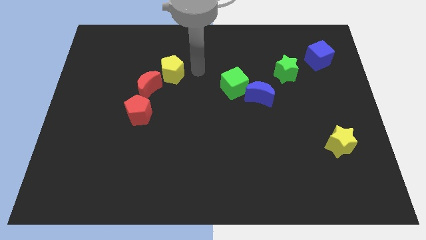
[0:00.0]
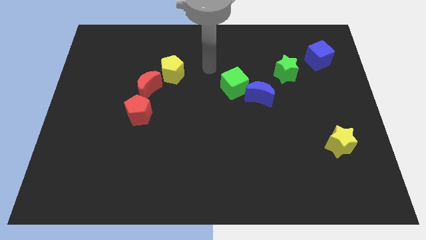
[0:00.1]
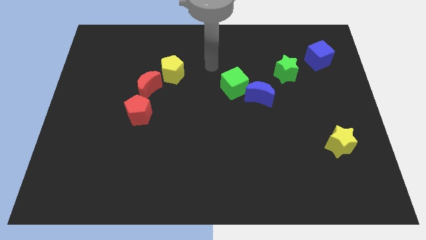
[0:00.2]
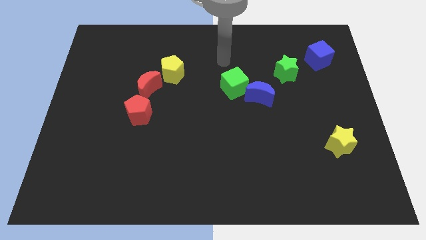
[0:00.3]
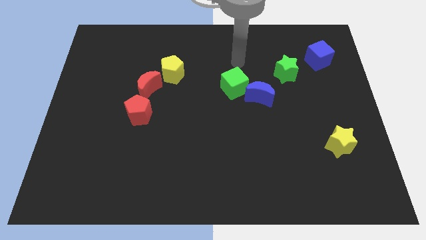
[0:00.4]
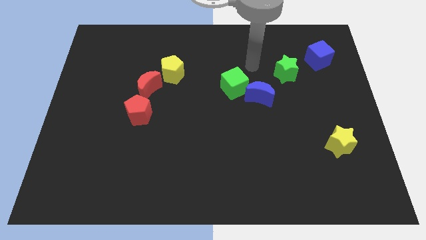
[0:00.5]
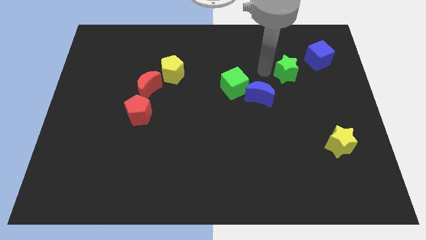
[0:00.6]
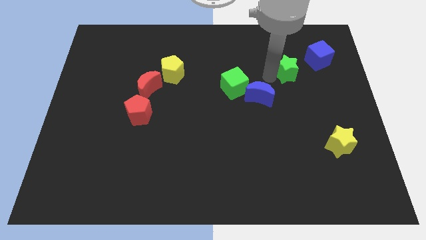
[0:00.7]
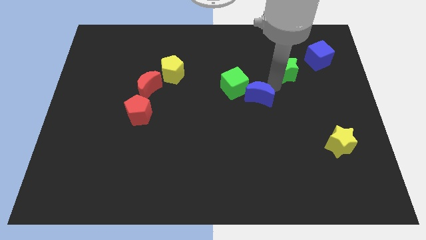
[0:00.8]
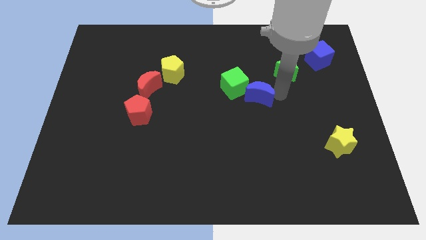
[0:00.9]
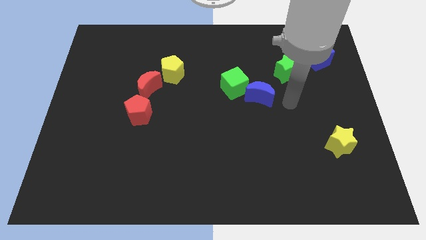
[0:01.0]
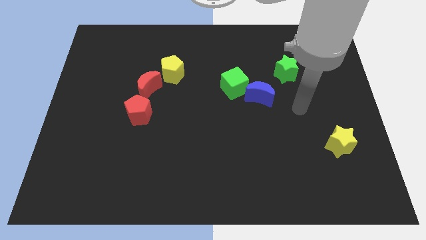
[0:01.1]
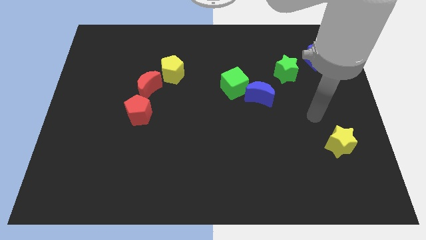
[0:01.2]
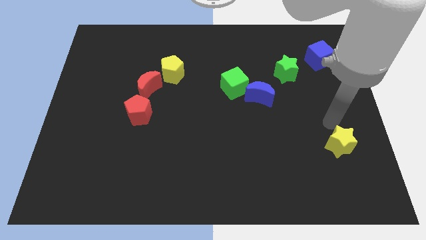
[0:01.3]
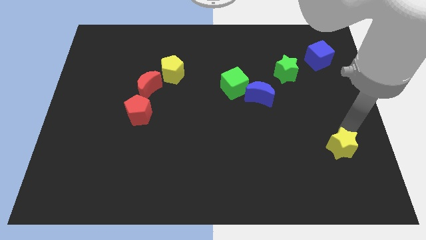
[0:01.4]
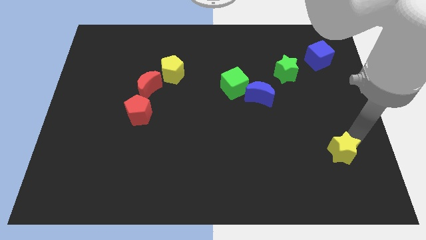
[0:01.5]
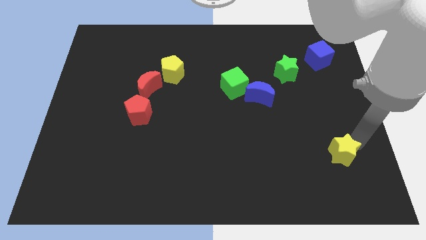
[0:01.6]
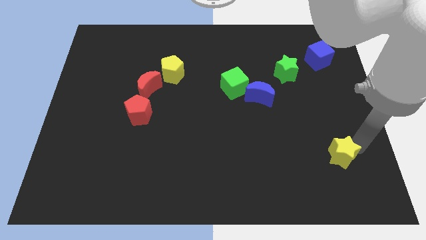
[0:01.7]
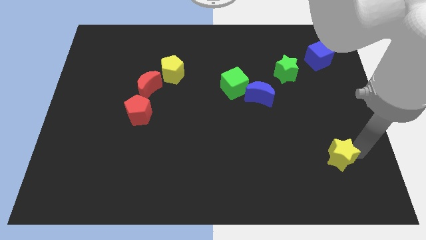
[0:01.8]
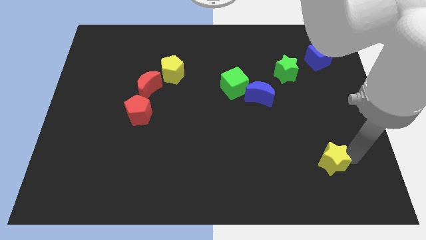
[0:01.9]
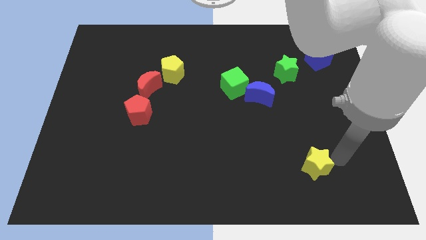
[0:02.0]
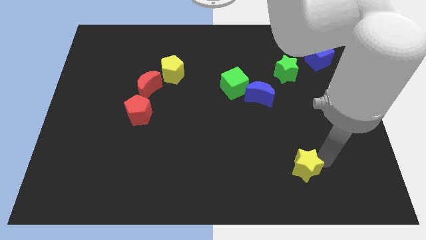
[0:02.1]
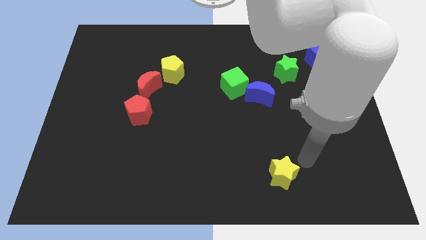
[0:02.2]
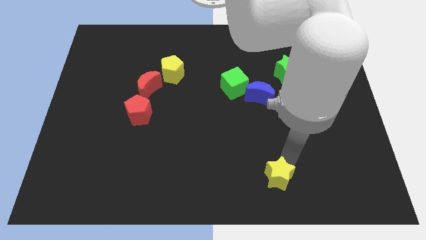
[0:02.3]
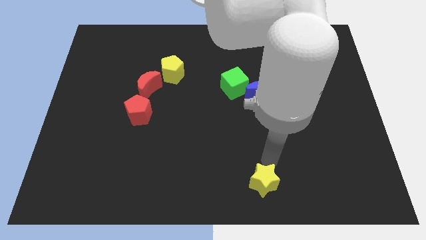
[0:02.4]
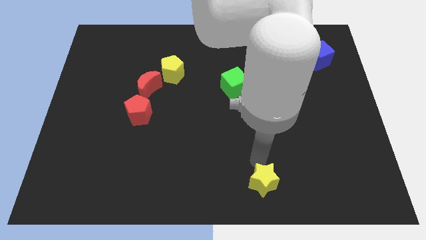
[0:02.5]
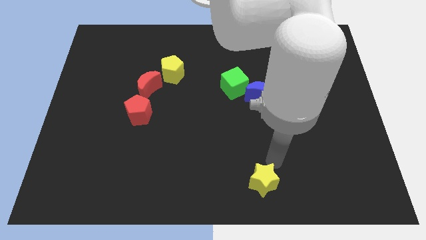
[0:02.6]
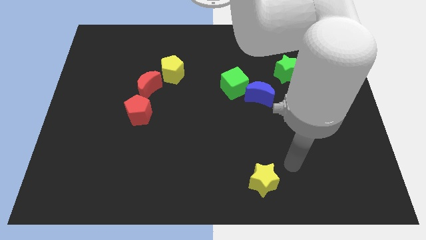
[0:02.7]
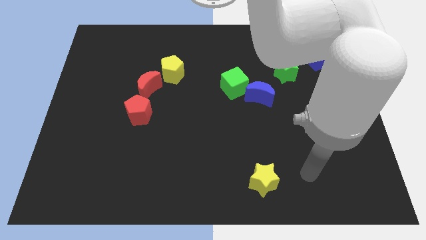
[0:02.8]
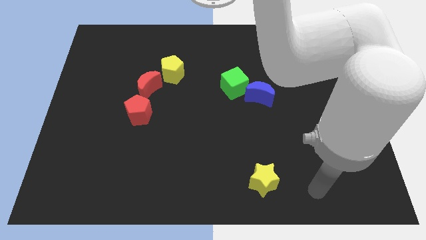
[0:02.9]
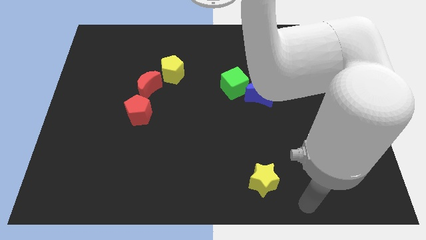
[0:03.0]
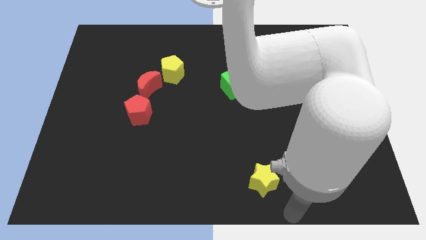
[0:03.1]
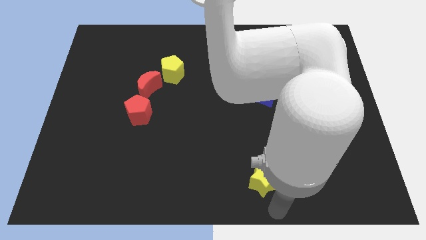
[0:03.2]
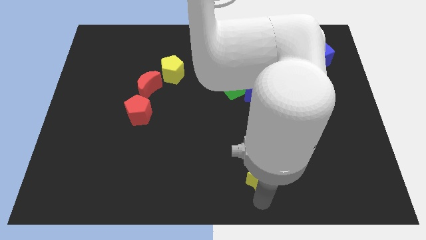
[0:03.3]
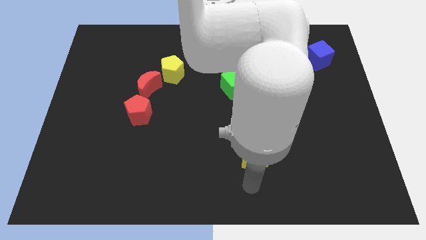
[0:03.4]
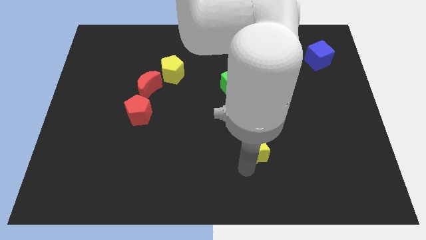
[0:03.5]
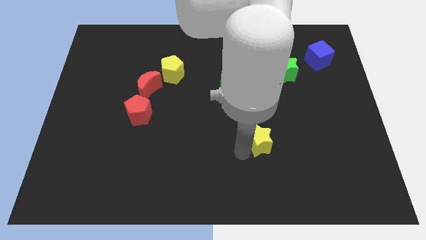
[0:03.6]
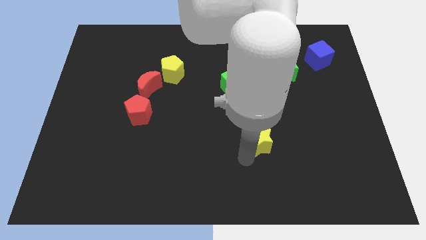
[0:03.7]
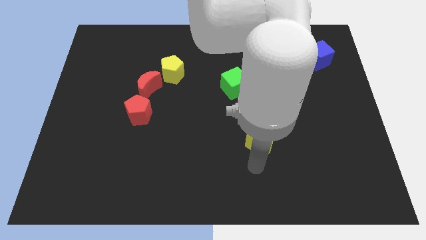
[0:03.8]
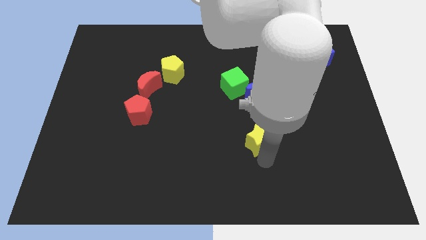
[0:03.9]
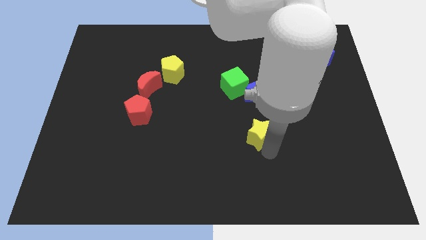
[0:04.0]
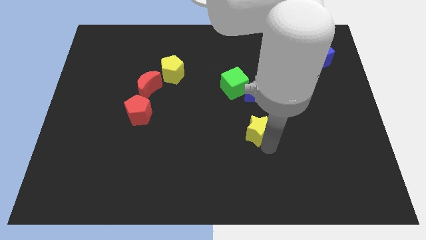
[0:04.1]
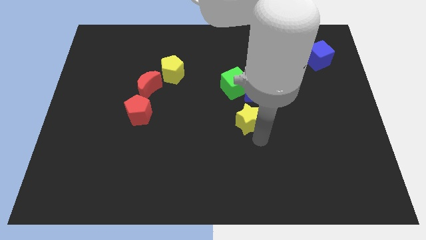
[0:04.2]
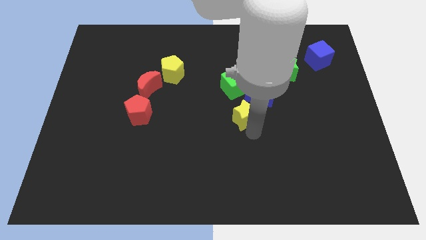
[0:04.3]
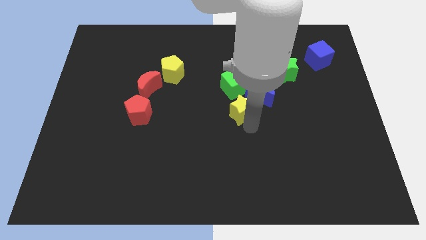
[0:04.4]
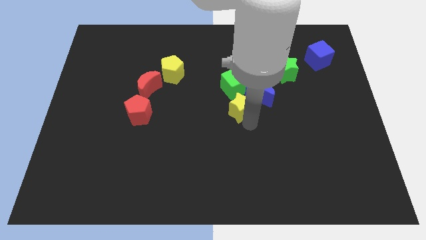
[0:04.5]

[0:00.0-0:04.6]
move the yellow star towards the bottom side of the green cube

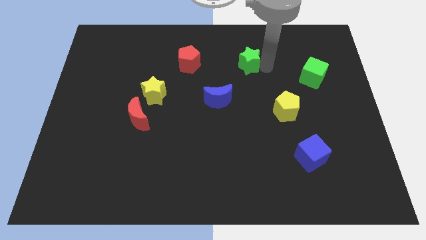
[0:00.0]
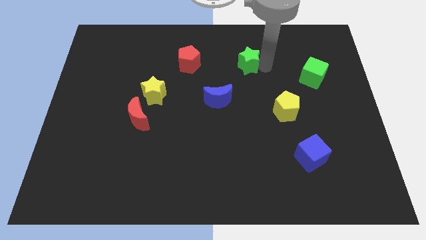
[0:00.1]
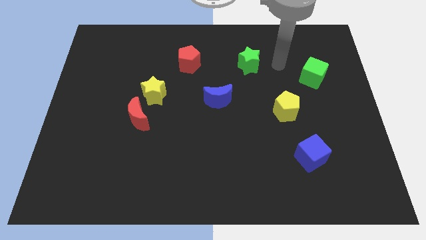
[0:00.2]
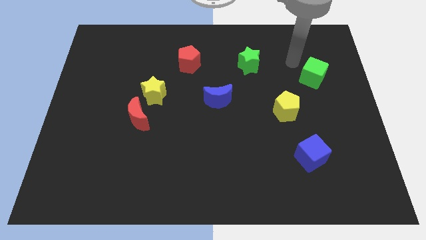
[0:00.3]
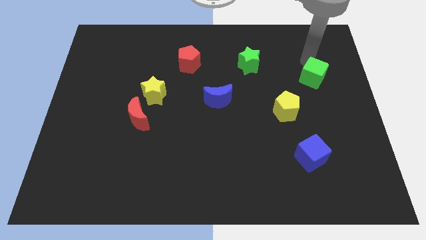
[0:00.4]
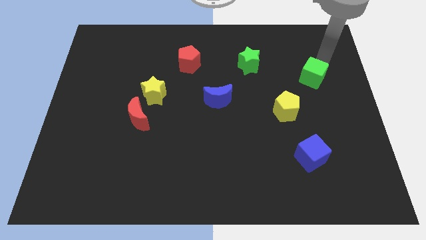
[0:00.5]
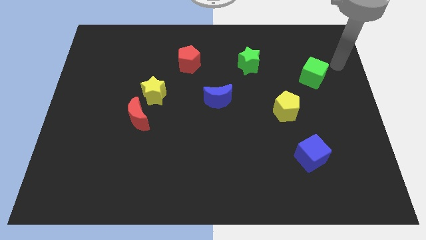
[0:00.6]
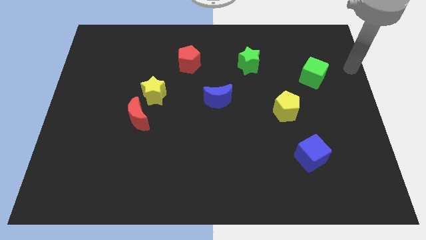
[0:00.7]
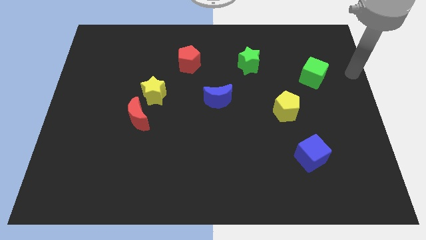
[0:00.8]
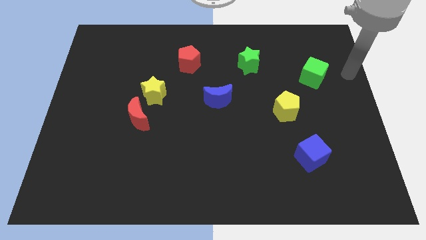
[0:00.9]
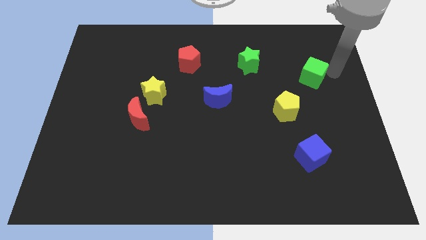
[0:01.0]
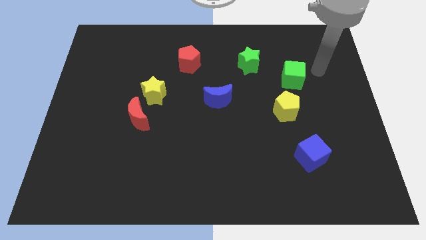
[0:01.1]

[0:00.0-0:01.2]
move your arm right side of the green cube

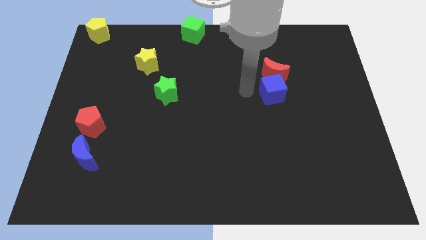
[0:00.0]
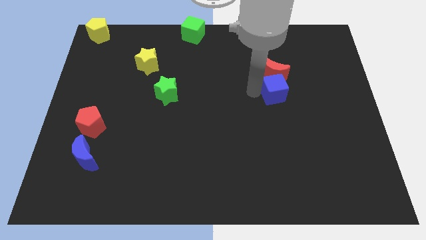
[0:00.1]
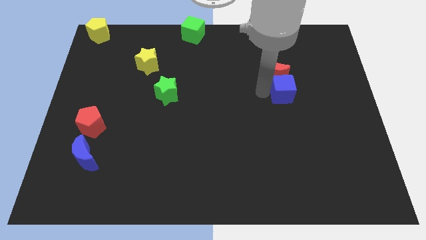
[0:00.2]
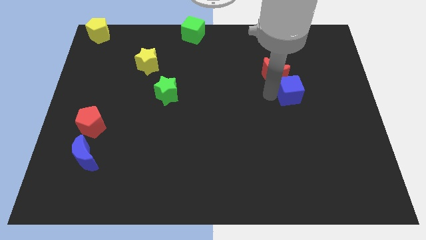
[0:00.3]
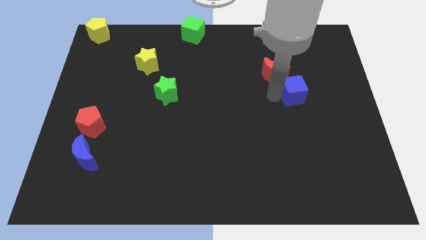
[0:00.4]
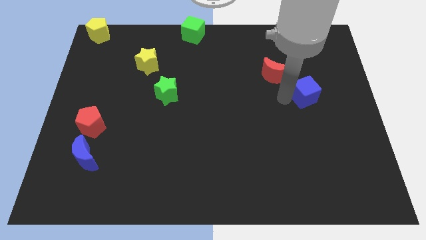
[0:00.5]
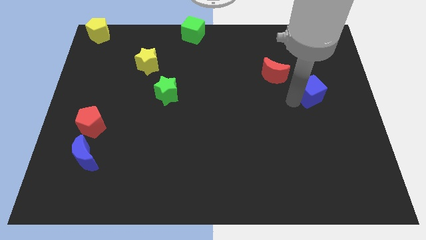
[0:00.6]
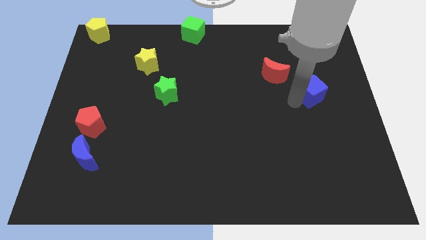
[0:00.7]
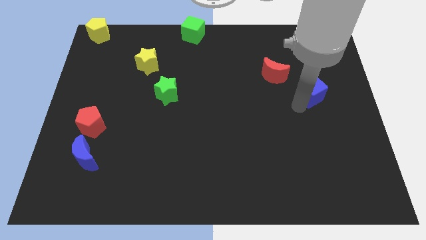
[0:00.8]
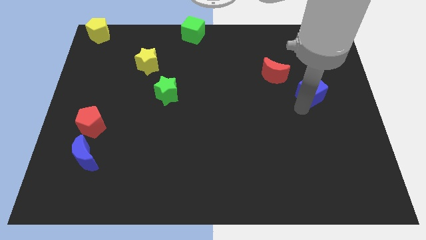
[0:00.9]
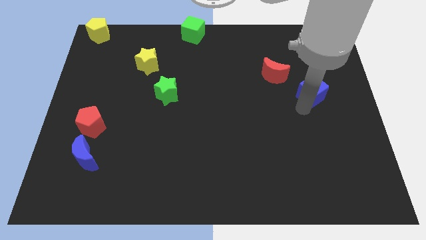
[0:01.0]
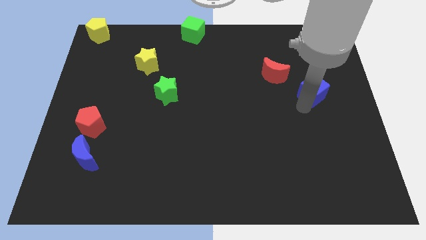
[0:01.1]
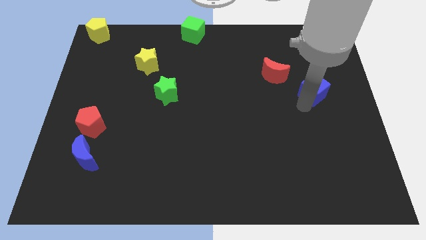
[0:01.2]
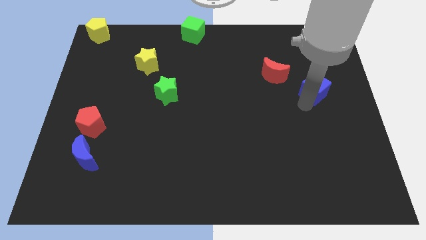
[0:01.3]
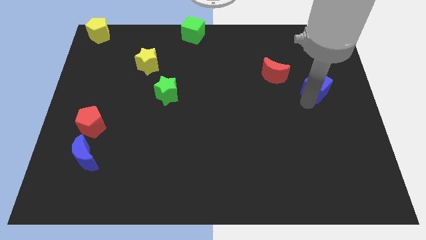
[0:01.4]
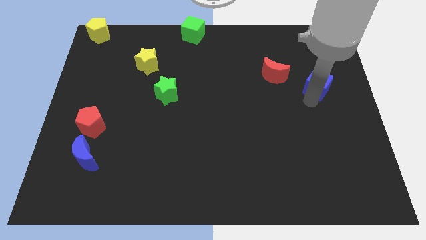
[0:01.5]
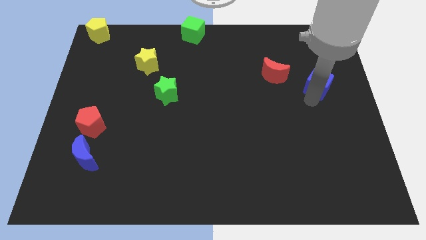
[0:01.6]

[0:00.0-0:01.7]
separate the blue cube from the red crescent

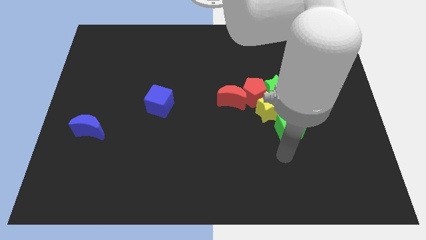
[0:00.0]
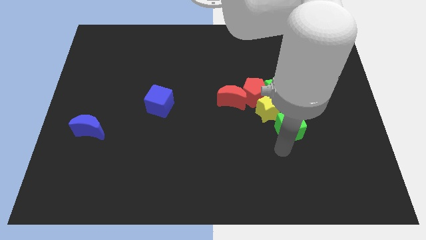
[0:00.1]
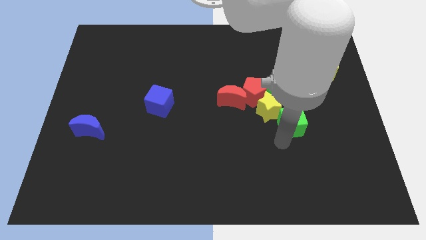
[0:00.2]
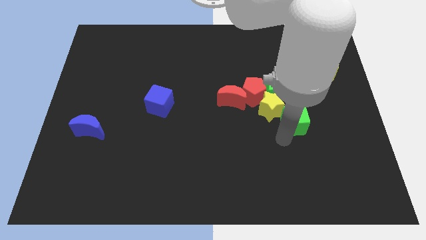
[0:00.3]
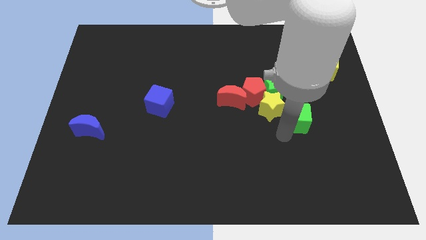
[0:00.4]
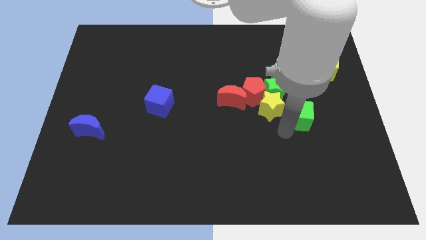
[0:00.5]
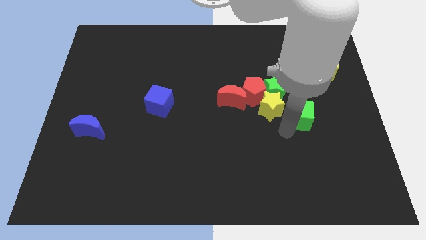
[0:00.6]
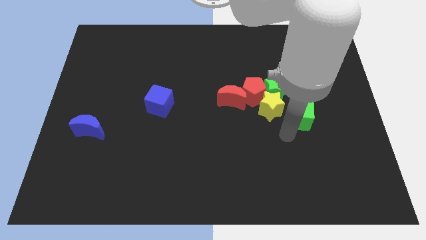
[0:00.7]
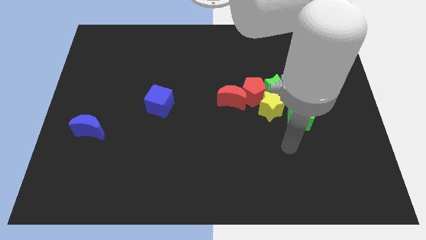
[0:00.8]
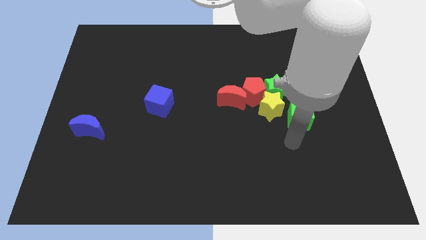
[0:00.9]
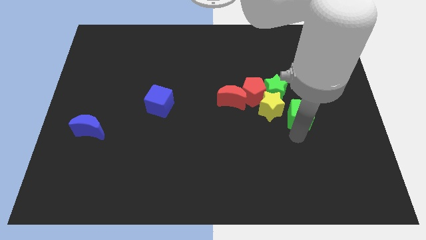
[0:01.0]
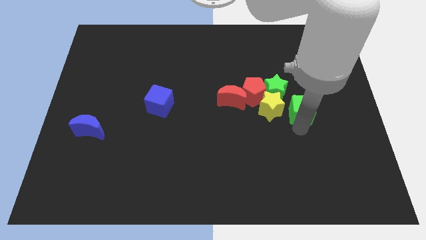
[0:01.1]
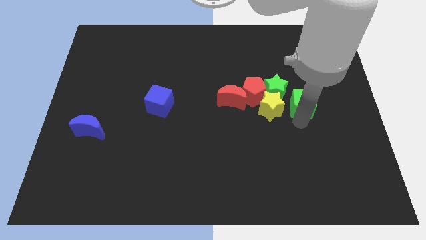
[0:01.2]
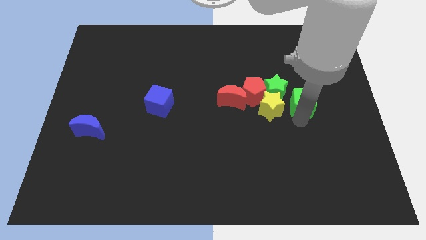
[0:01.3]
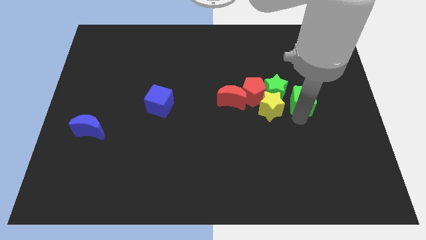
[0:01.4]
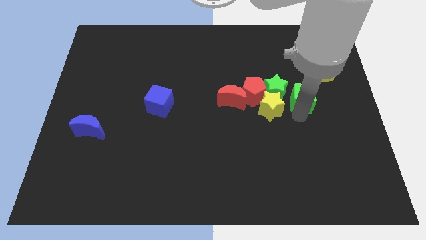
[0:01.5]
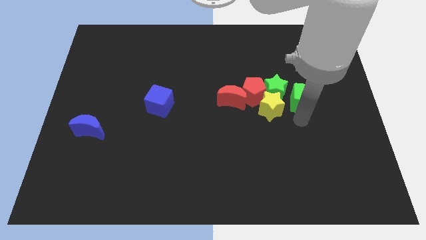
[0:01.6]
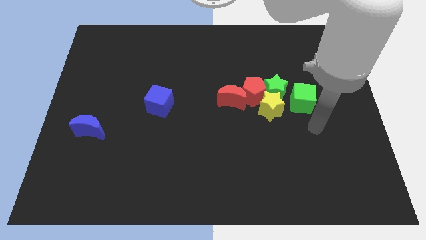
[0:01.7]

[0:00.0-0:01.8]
move the green cube to the right of the group of stars
